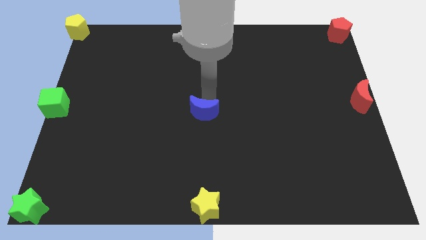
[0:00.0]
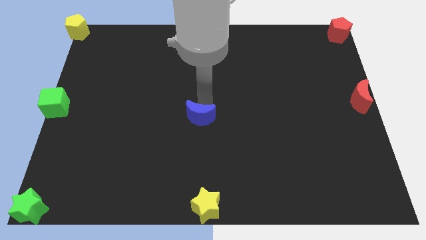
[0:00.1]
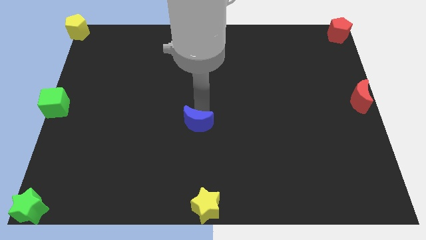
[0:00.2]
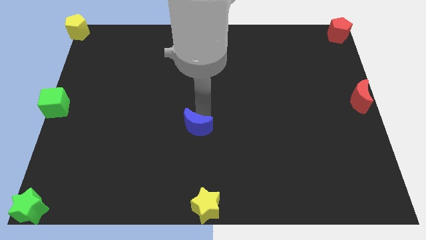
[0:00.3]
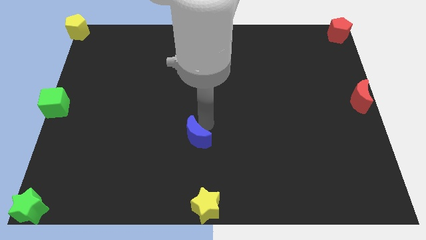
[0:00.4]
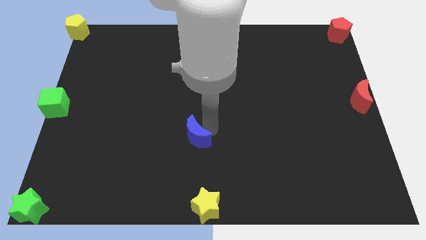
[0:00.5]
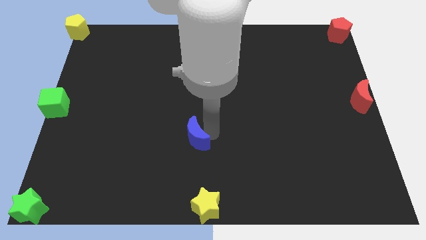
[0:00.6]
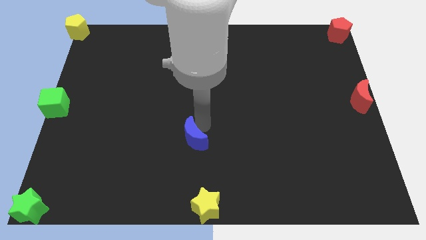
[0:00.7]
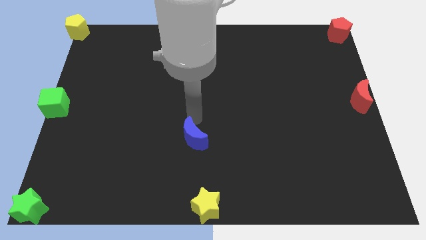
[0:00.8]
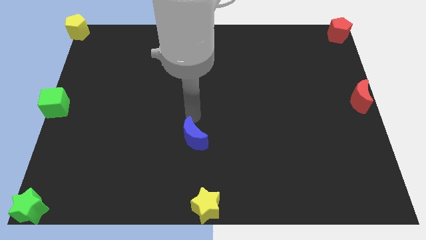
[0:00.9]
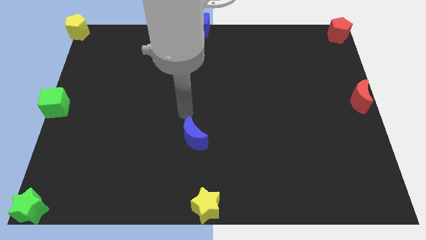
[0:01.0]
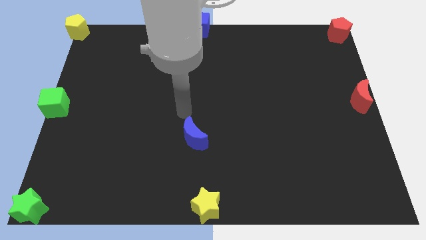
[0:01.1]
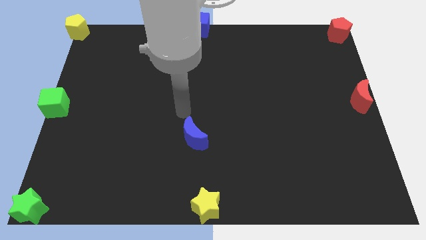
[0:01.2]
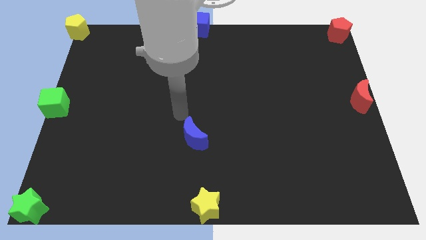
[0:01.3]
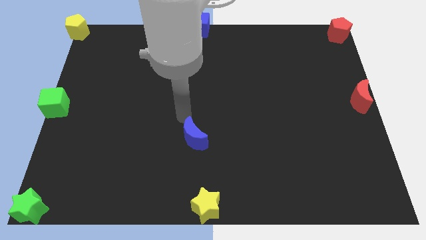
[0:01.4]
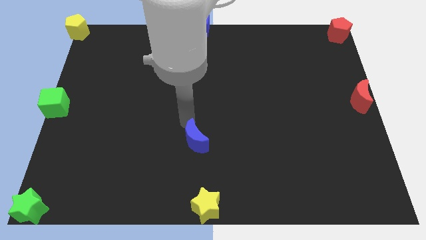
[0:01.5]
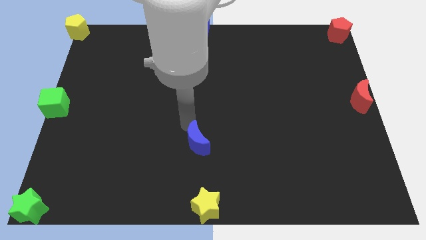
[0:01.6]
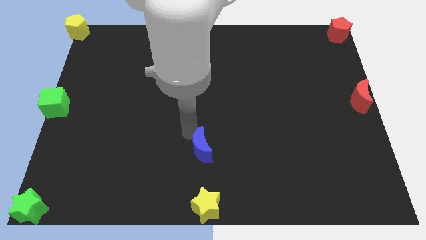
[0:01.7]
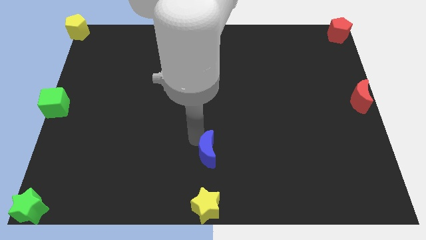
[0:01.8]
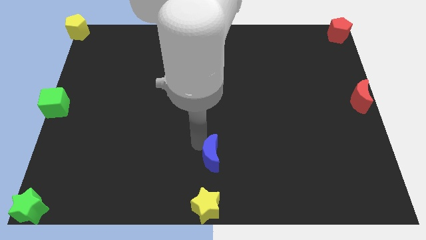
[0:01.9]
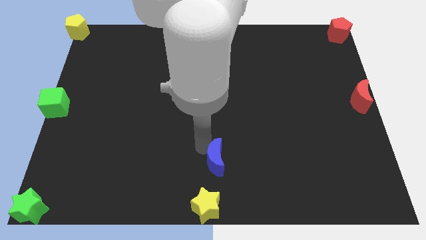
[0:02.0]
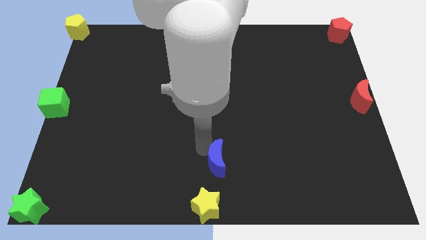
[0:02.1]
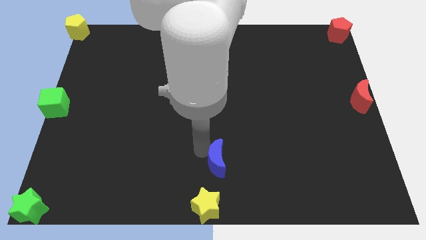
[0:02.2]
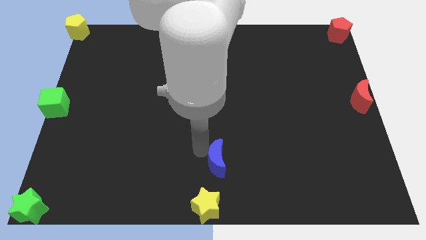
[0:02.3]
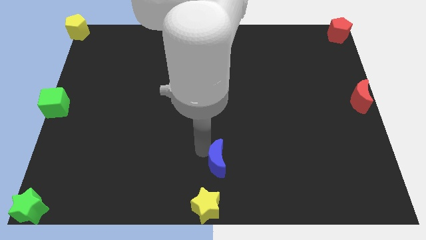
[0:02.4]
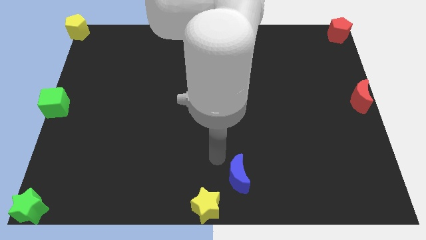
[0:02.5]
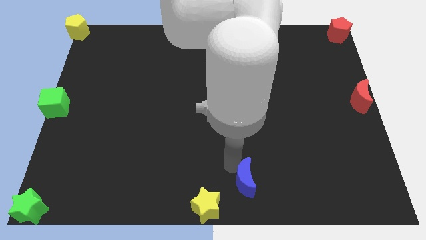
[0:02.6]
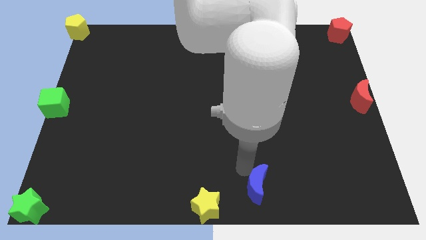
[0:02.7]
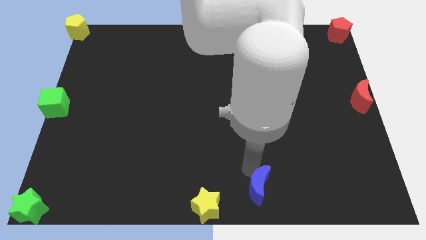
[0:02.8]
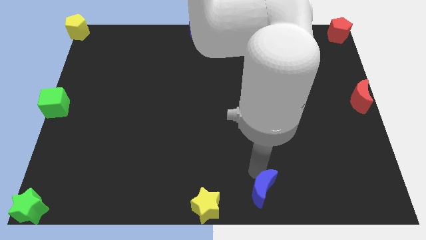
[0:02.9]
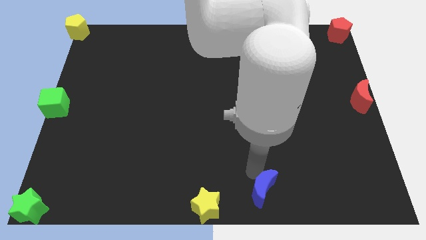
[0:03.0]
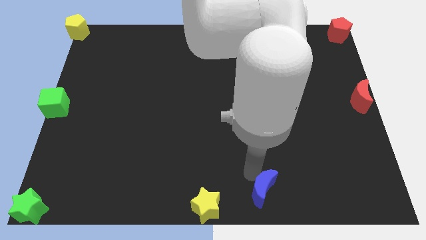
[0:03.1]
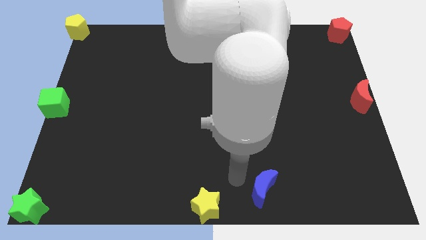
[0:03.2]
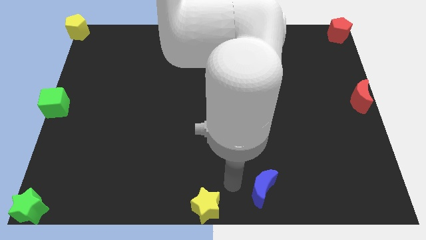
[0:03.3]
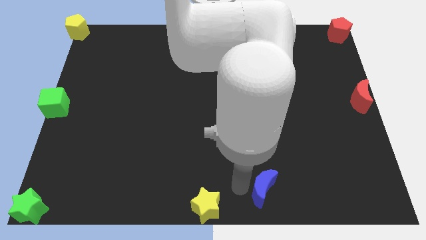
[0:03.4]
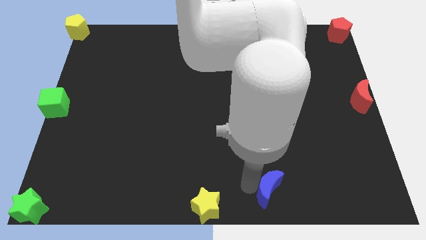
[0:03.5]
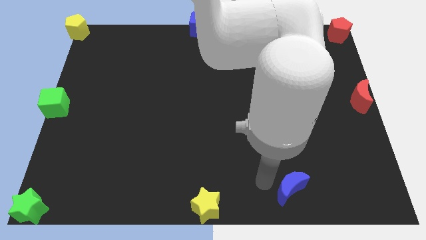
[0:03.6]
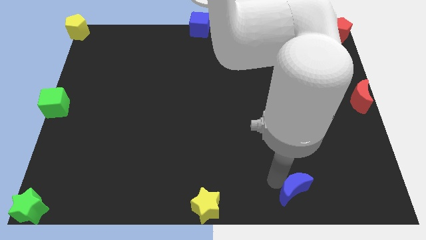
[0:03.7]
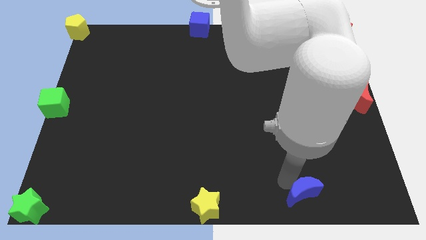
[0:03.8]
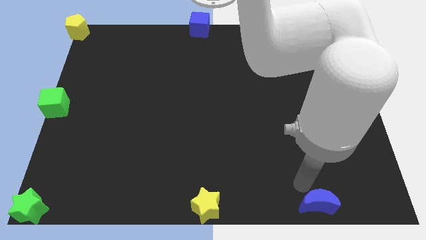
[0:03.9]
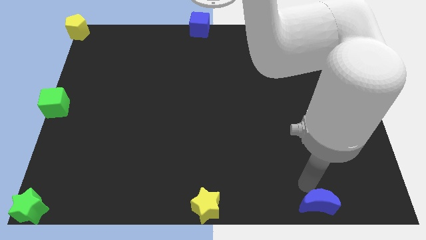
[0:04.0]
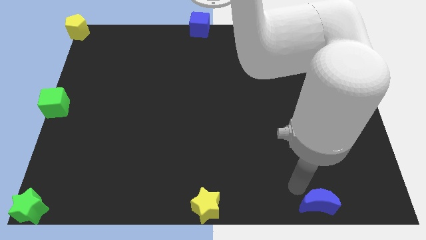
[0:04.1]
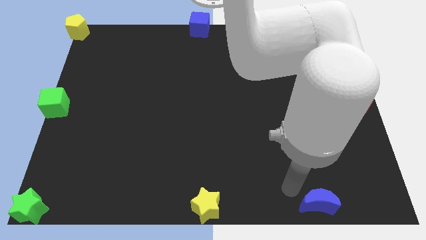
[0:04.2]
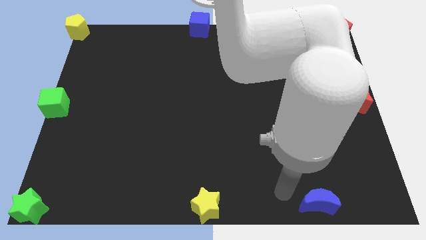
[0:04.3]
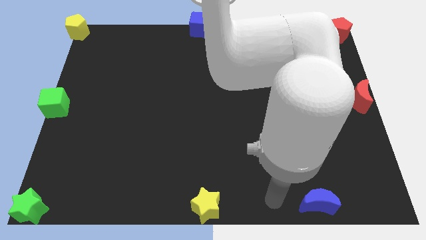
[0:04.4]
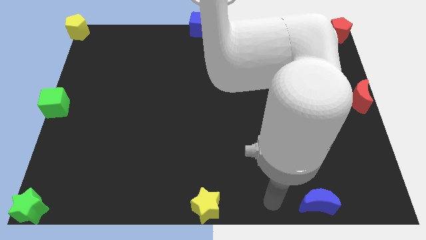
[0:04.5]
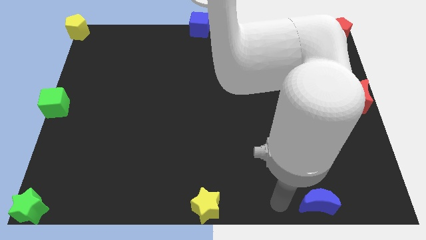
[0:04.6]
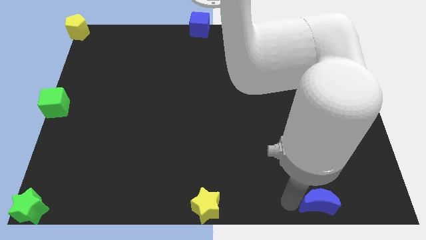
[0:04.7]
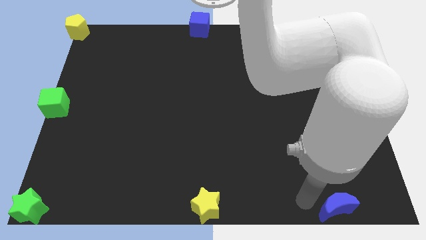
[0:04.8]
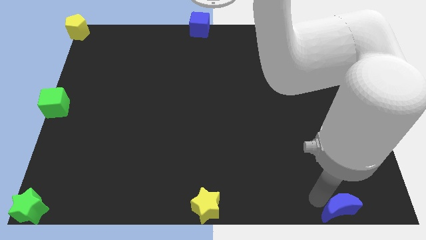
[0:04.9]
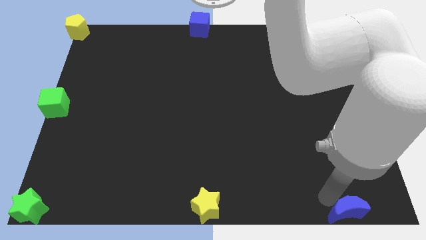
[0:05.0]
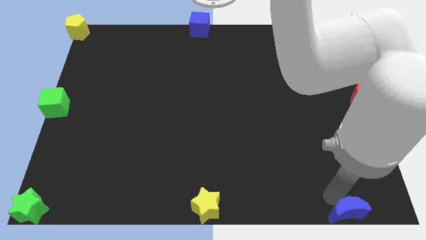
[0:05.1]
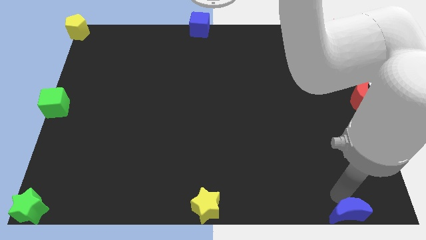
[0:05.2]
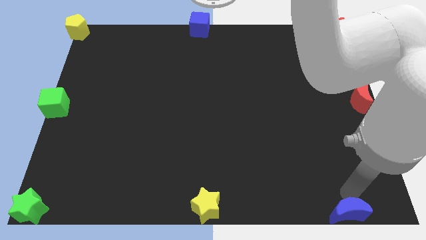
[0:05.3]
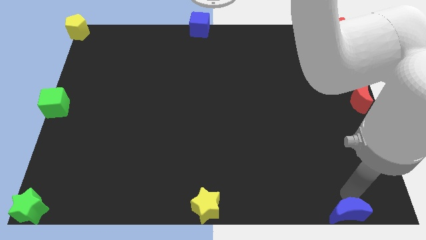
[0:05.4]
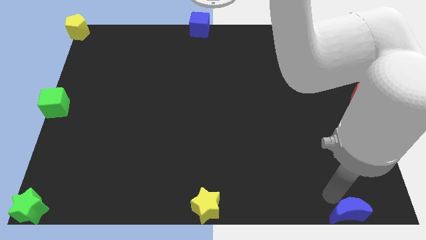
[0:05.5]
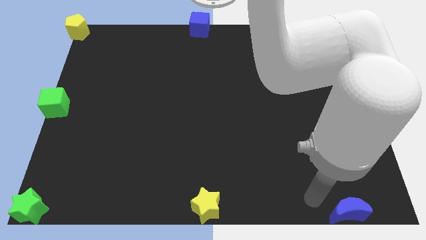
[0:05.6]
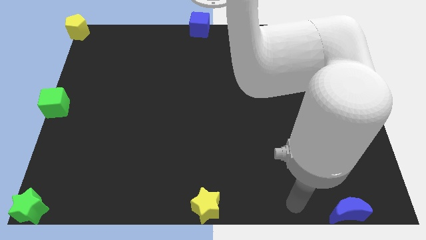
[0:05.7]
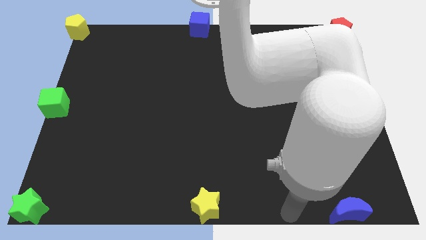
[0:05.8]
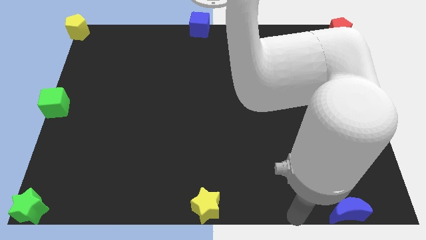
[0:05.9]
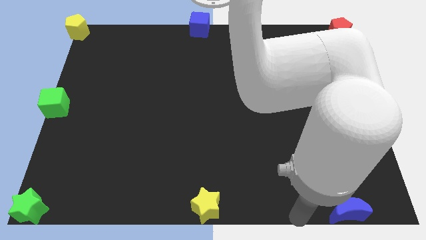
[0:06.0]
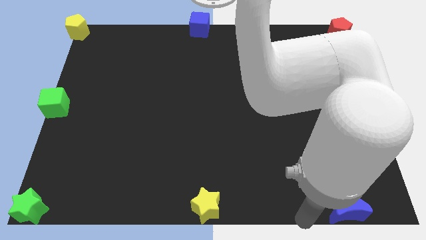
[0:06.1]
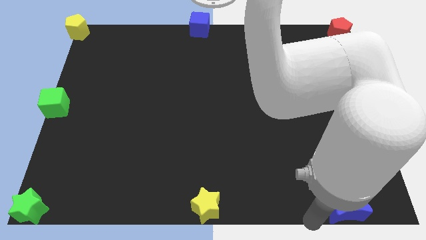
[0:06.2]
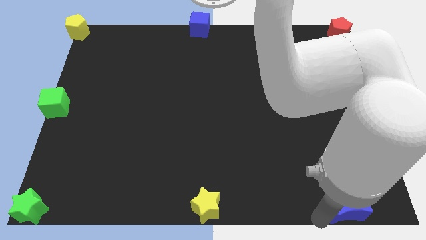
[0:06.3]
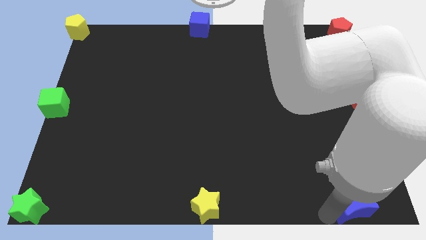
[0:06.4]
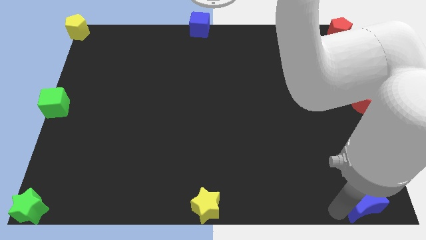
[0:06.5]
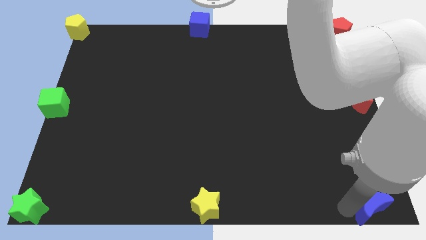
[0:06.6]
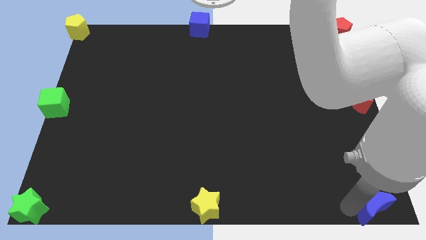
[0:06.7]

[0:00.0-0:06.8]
push the blue crescent to the bottom right corner of the board

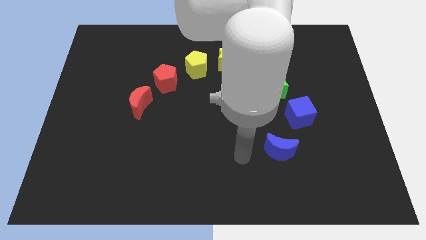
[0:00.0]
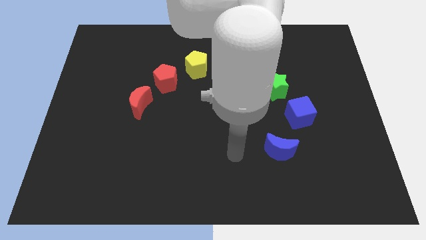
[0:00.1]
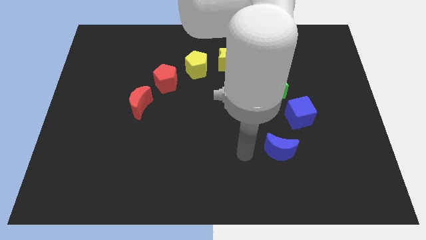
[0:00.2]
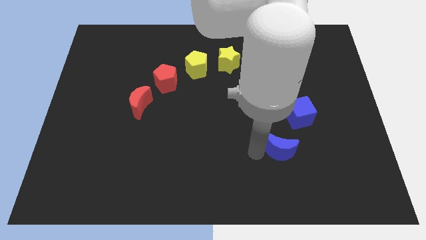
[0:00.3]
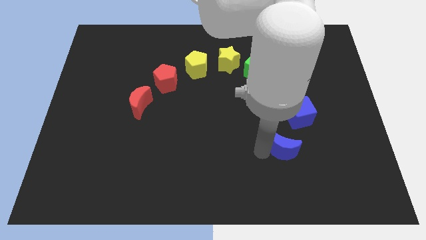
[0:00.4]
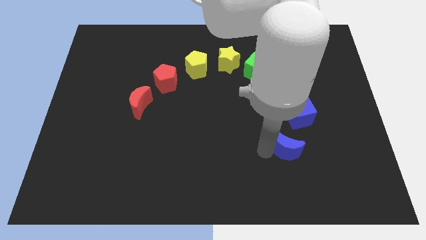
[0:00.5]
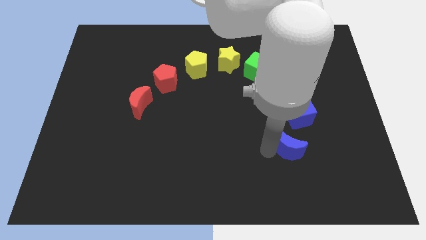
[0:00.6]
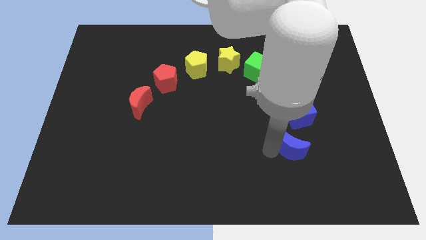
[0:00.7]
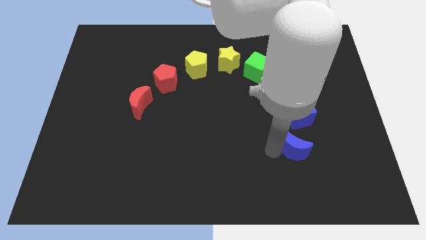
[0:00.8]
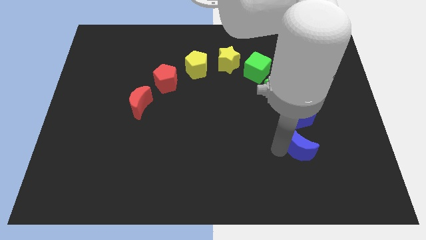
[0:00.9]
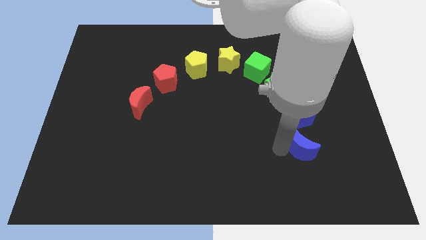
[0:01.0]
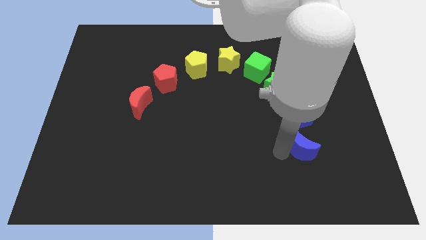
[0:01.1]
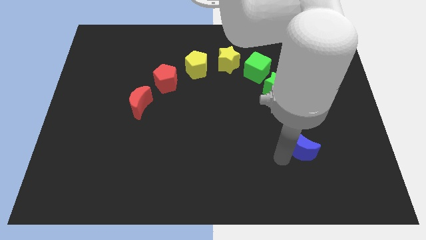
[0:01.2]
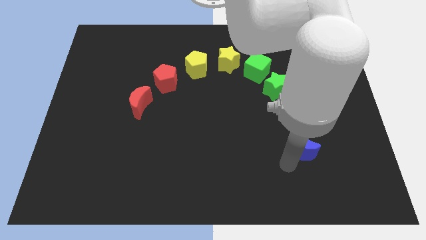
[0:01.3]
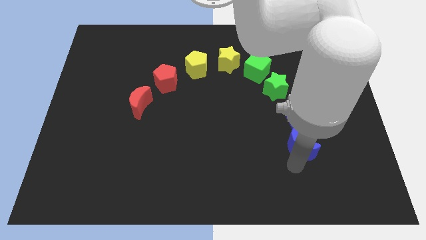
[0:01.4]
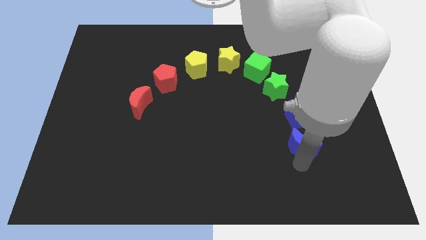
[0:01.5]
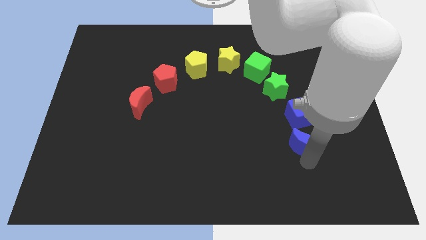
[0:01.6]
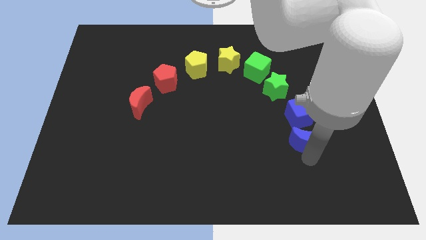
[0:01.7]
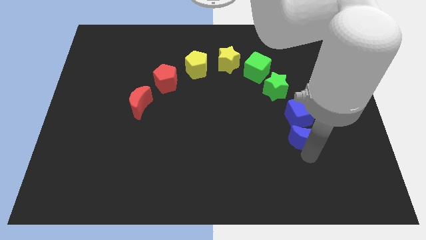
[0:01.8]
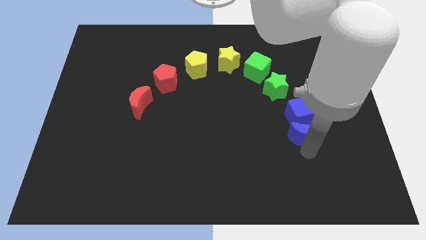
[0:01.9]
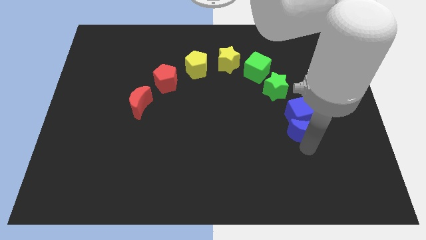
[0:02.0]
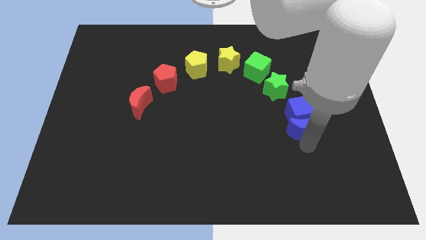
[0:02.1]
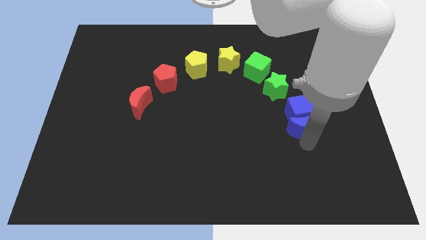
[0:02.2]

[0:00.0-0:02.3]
push the blue crescent into the bottom of the blue cube
